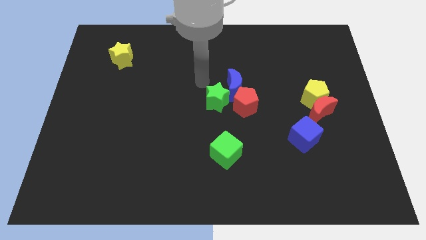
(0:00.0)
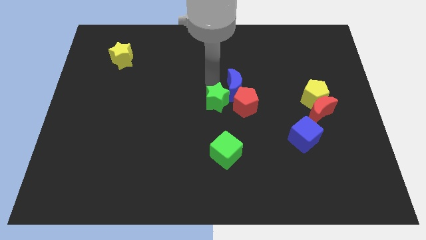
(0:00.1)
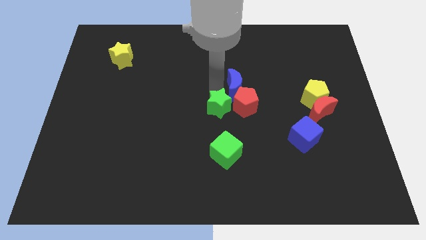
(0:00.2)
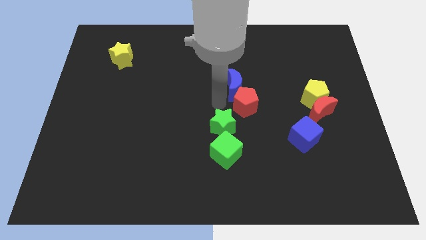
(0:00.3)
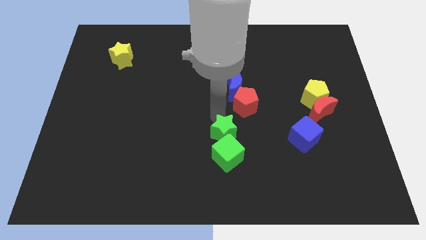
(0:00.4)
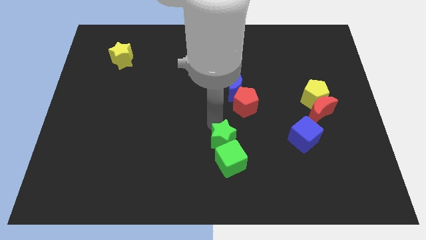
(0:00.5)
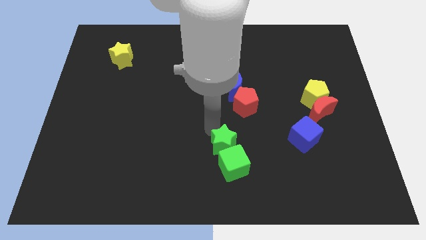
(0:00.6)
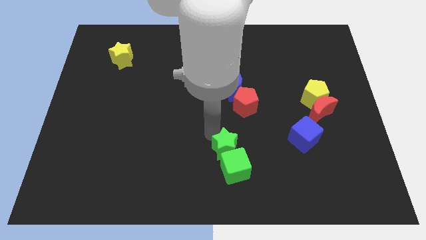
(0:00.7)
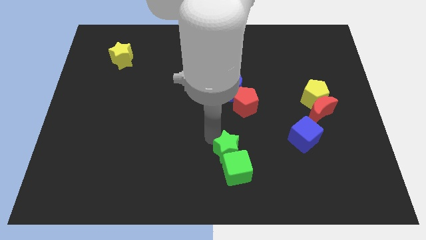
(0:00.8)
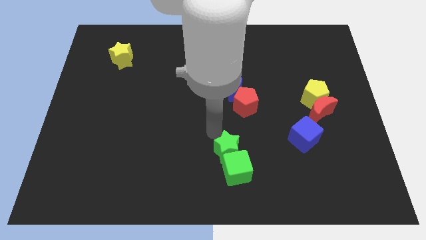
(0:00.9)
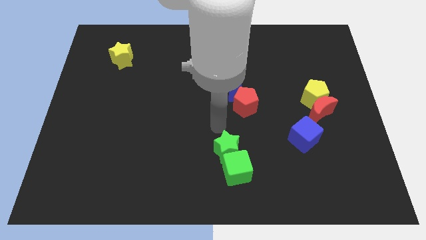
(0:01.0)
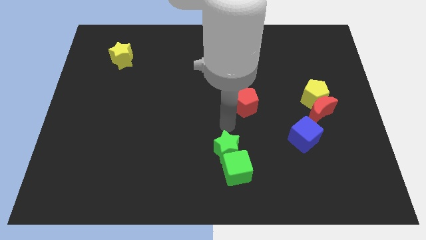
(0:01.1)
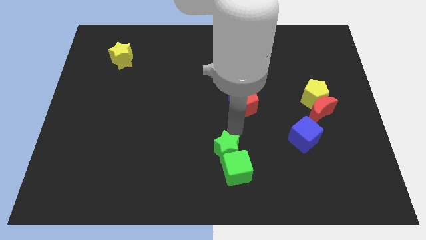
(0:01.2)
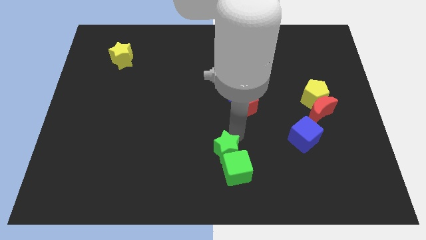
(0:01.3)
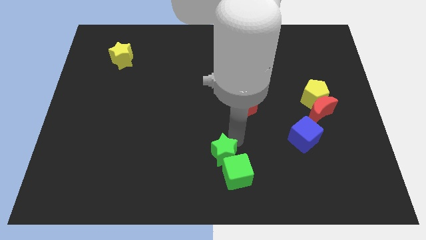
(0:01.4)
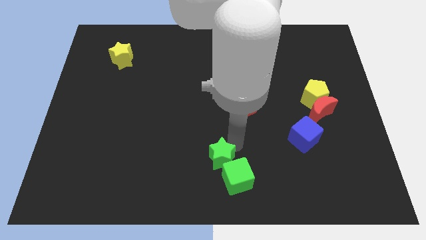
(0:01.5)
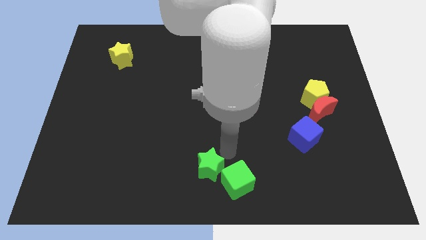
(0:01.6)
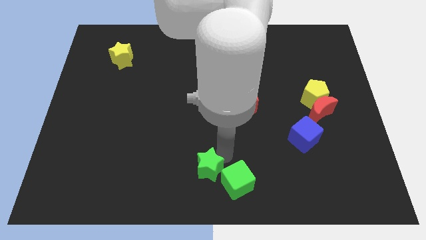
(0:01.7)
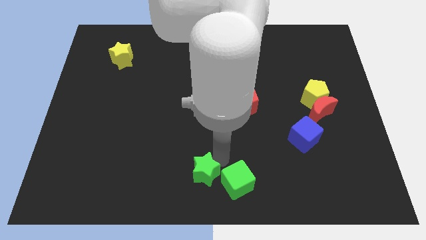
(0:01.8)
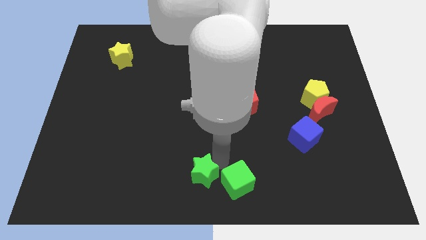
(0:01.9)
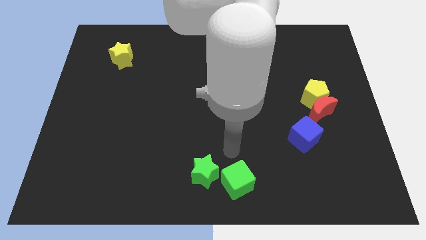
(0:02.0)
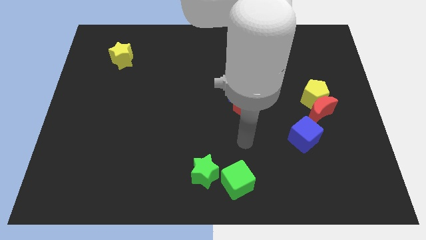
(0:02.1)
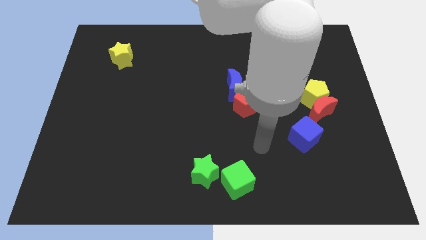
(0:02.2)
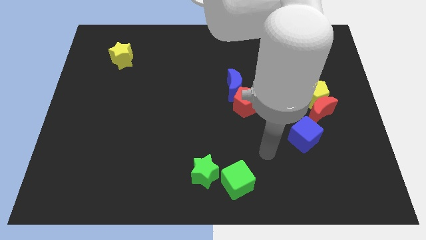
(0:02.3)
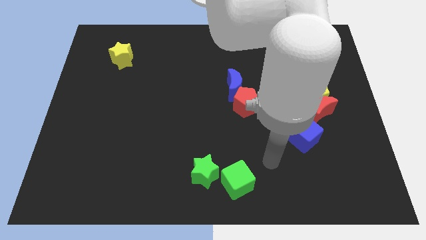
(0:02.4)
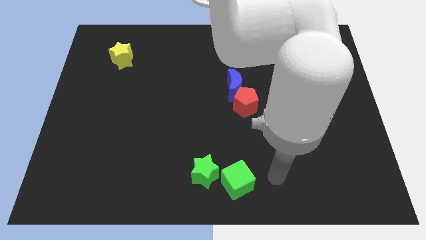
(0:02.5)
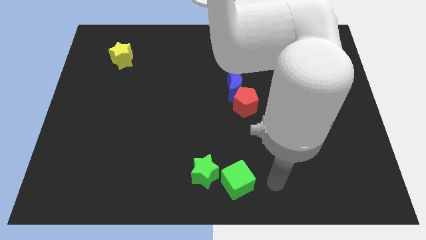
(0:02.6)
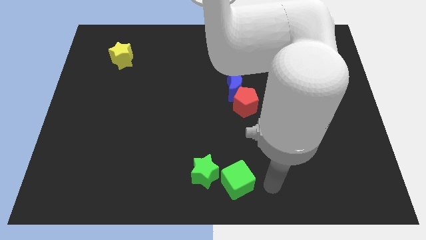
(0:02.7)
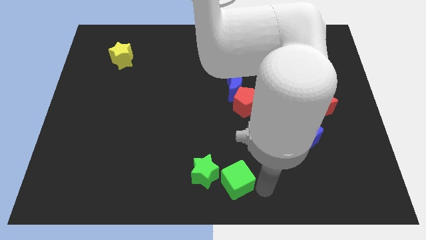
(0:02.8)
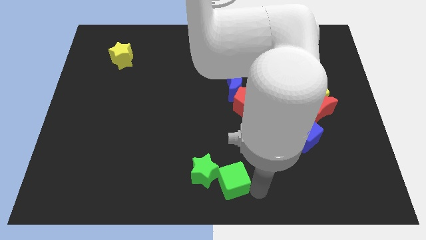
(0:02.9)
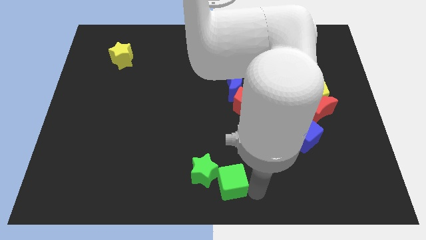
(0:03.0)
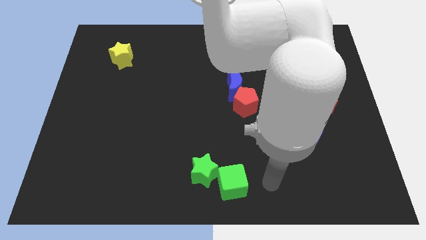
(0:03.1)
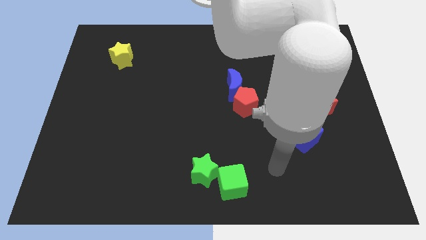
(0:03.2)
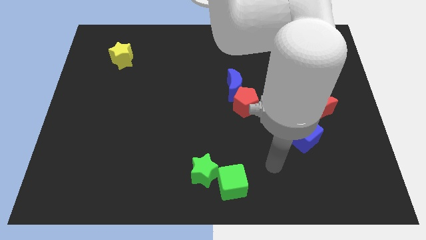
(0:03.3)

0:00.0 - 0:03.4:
push the group of green blocks to the bottom center

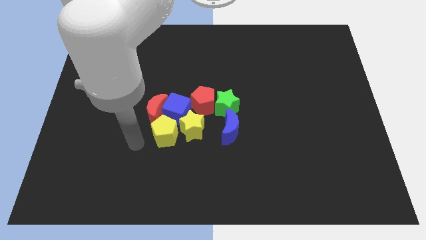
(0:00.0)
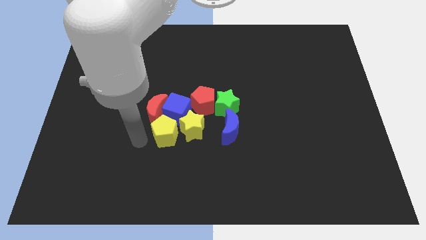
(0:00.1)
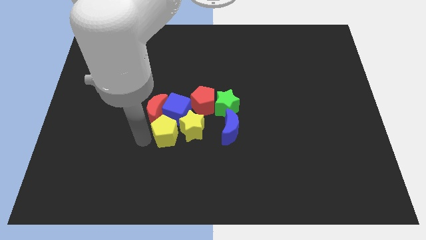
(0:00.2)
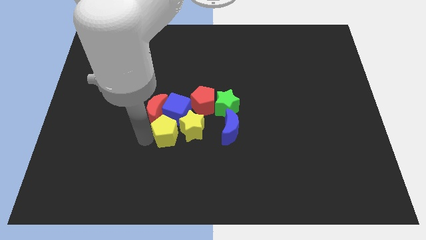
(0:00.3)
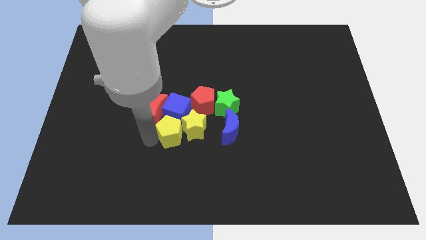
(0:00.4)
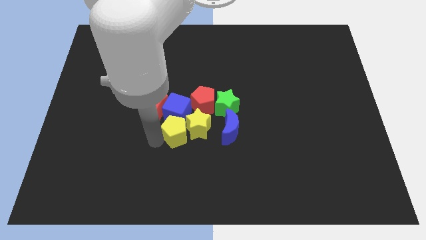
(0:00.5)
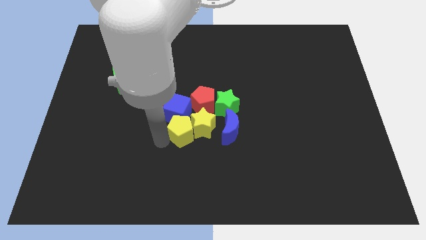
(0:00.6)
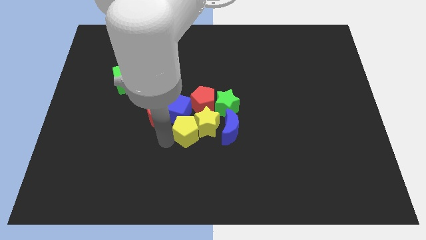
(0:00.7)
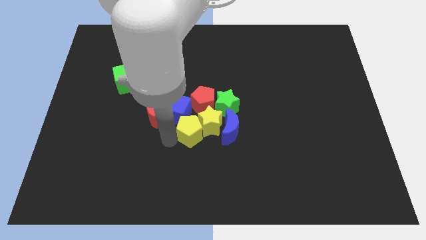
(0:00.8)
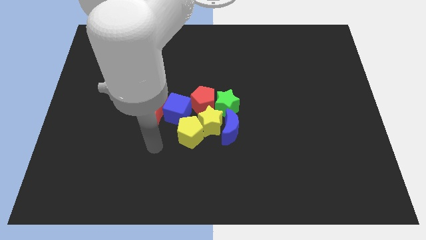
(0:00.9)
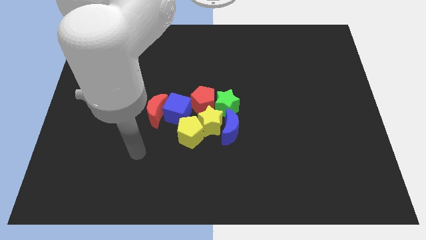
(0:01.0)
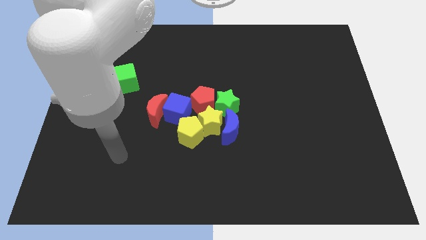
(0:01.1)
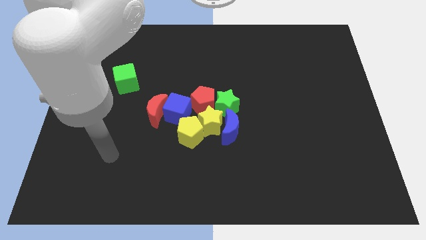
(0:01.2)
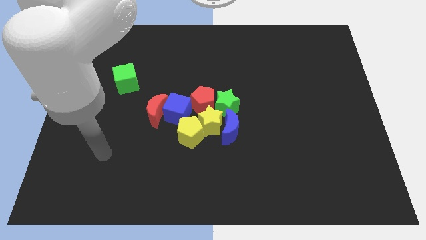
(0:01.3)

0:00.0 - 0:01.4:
slightly push the yellow blocks diagonally bottom left to the green star

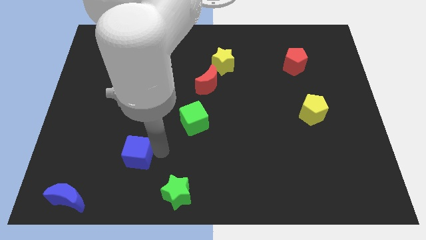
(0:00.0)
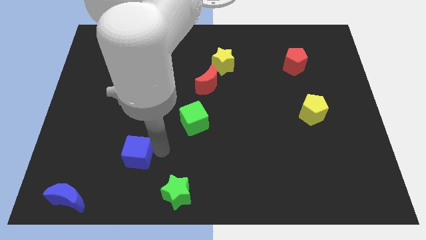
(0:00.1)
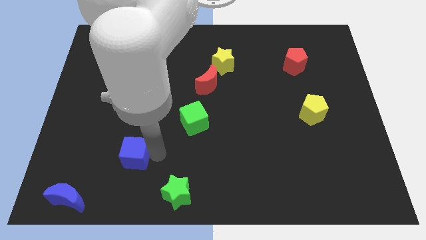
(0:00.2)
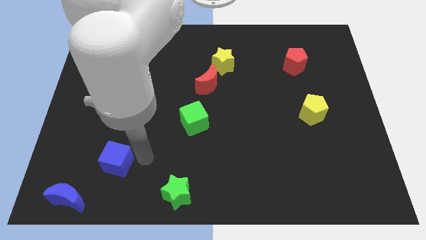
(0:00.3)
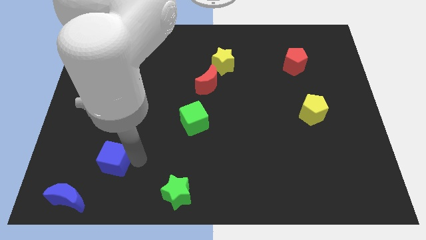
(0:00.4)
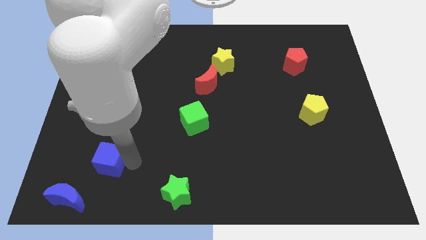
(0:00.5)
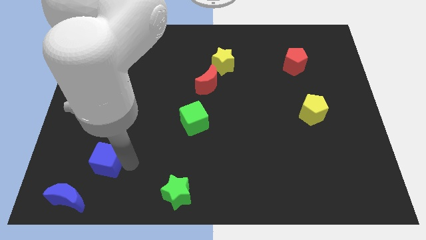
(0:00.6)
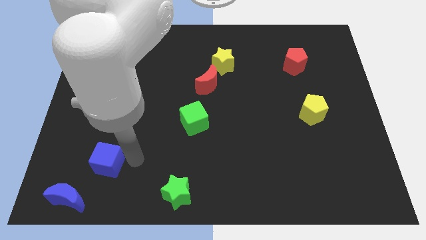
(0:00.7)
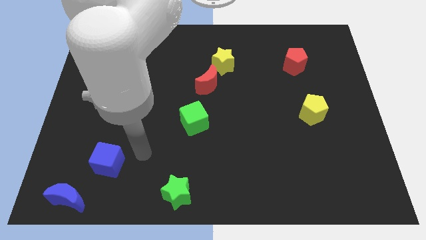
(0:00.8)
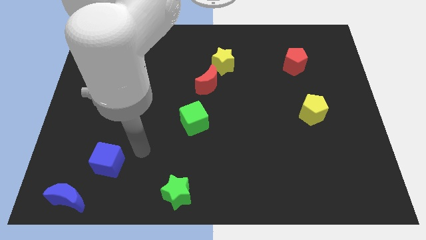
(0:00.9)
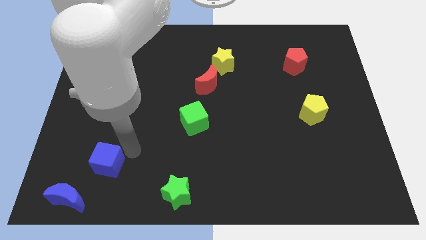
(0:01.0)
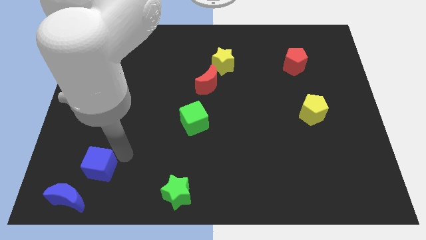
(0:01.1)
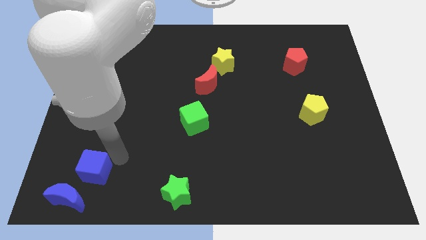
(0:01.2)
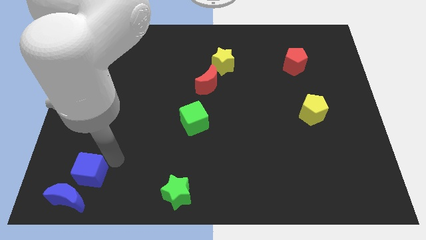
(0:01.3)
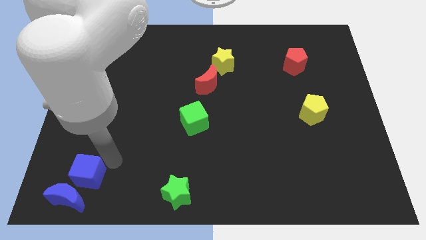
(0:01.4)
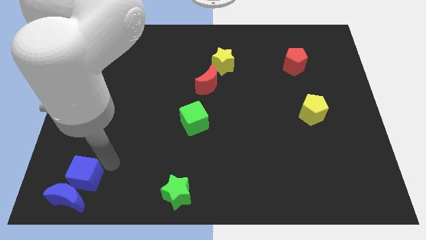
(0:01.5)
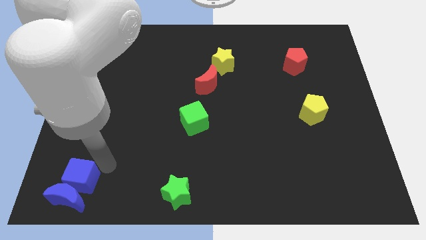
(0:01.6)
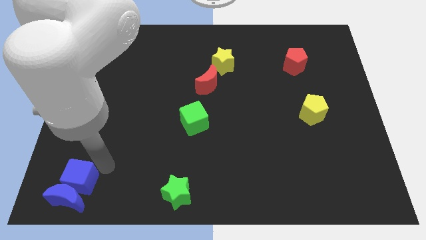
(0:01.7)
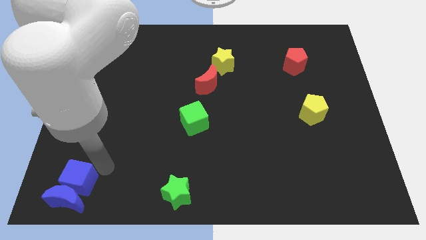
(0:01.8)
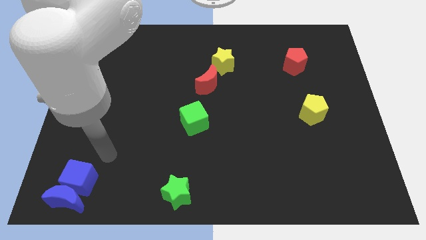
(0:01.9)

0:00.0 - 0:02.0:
push the blue cube into the blue crescent

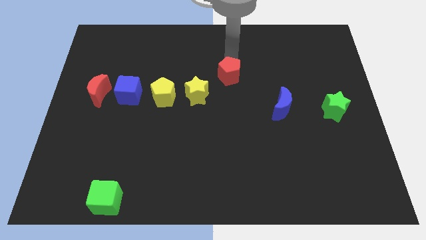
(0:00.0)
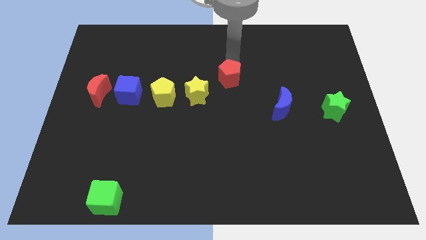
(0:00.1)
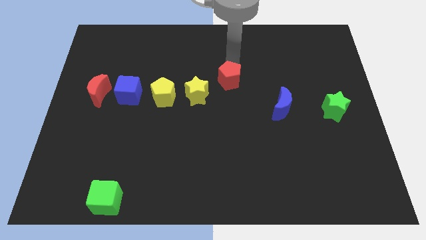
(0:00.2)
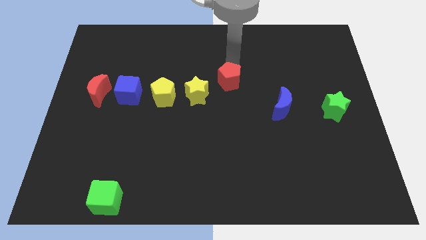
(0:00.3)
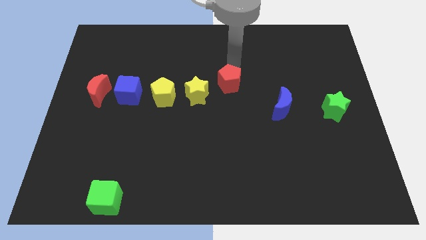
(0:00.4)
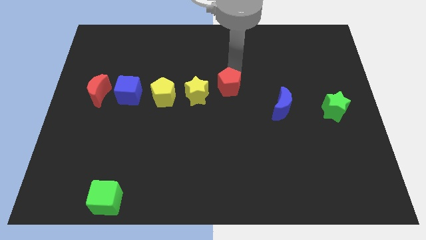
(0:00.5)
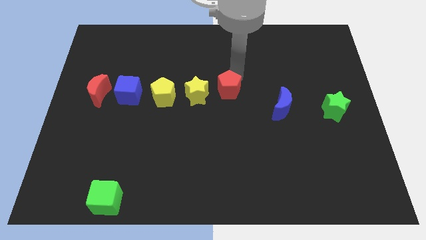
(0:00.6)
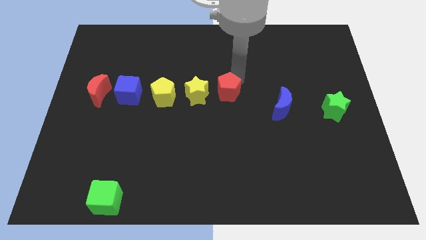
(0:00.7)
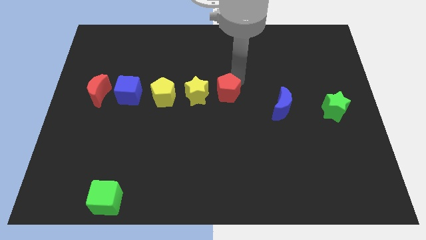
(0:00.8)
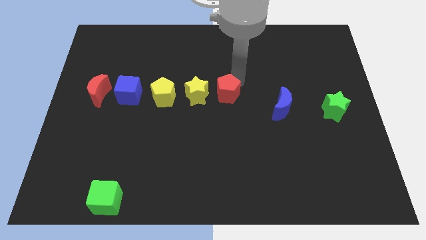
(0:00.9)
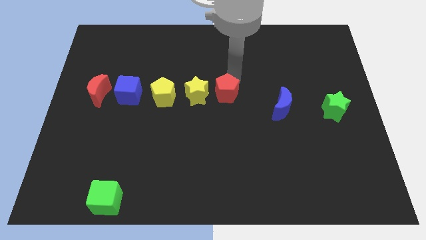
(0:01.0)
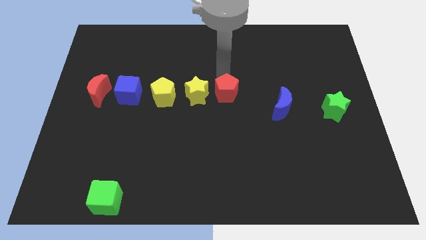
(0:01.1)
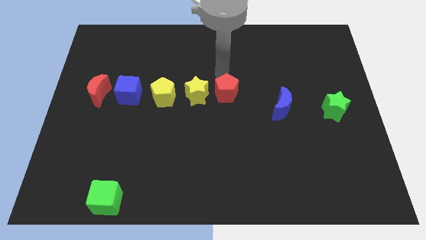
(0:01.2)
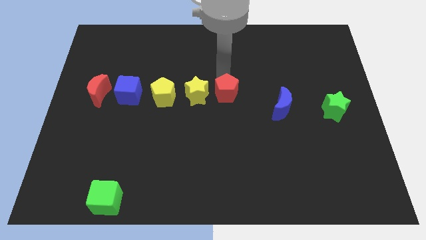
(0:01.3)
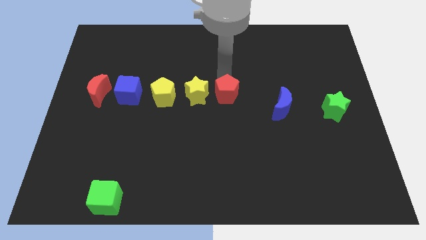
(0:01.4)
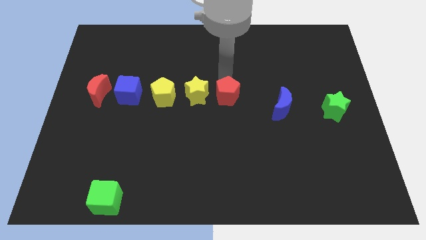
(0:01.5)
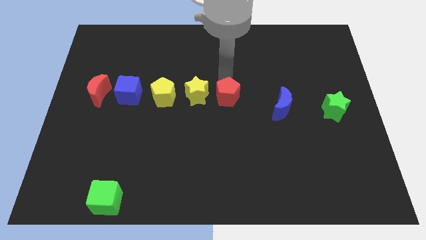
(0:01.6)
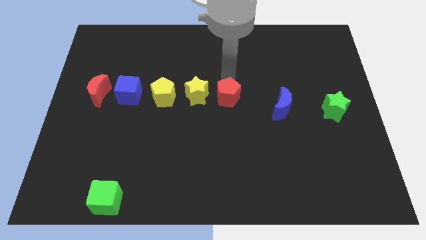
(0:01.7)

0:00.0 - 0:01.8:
push the red pentagon to the right of the yellow star

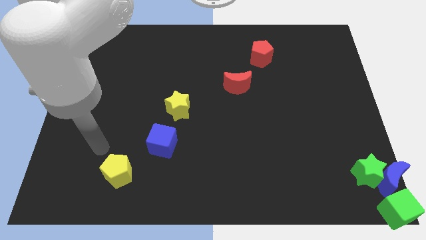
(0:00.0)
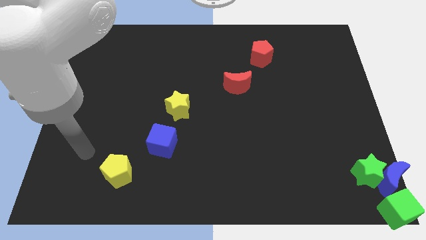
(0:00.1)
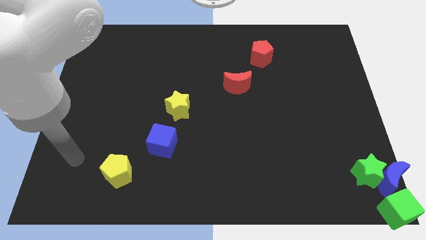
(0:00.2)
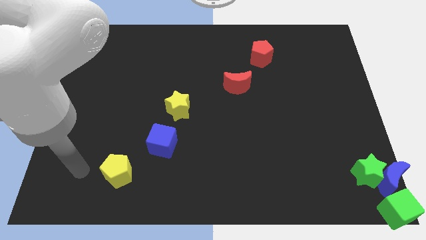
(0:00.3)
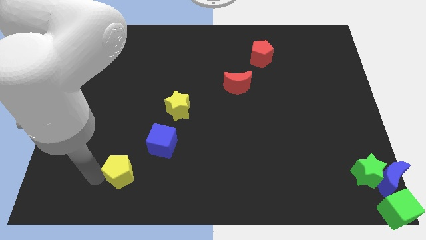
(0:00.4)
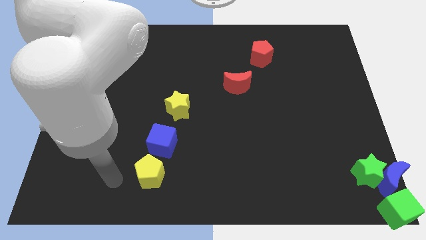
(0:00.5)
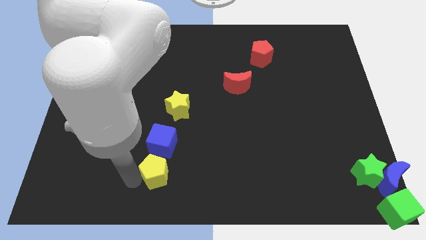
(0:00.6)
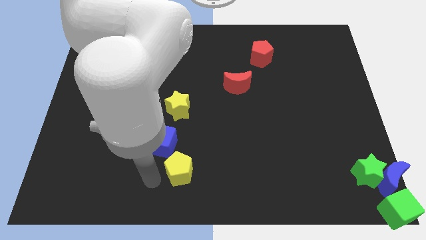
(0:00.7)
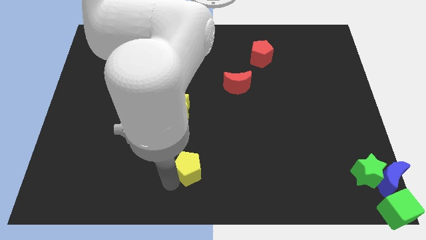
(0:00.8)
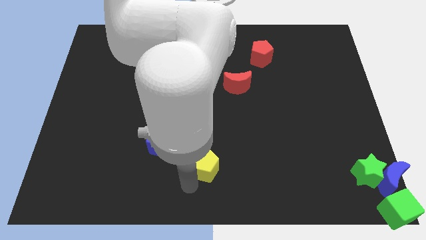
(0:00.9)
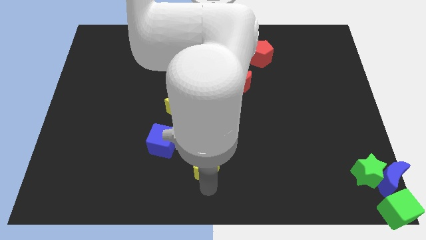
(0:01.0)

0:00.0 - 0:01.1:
move the yellow pentagon to the bottom right of the blue cube
